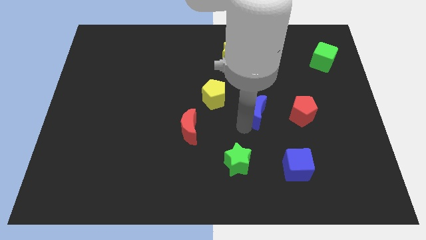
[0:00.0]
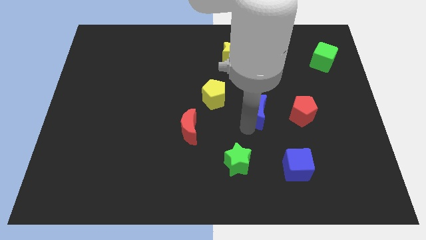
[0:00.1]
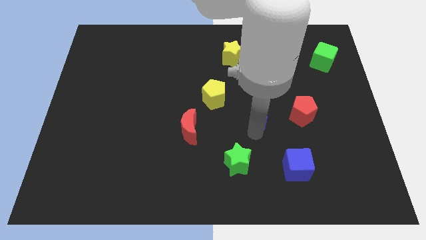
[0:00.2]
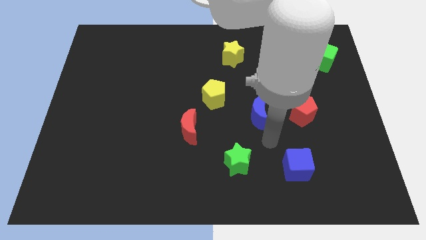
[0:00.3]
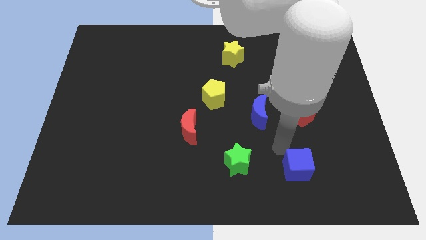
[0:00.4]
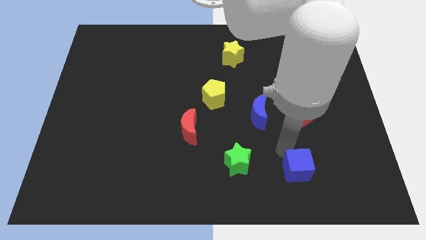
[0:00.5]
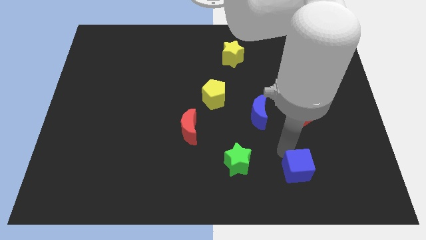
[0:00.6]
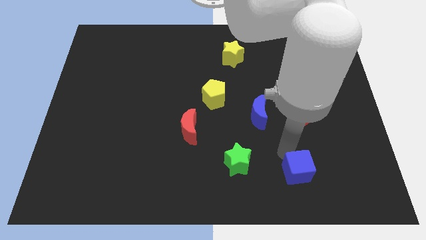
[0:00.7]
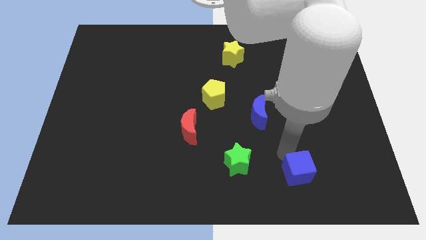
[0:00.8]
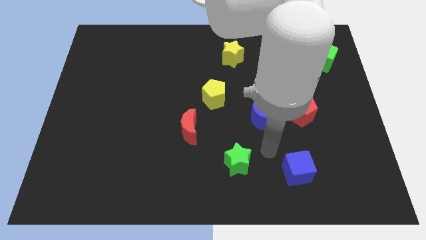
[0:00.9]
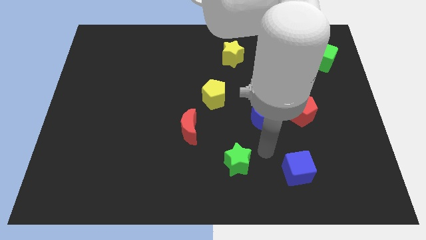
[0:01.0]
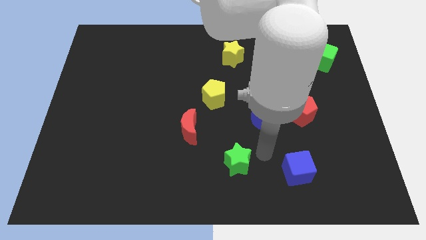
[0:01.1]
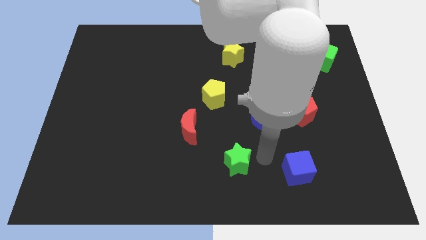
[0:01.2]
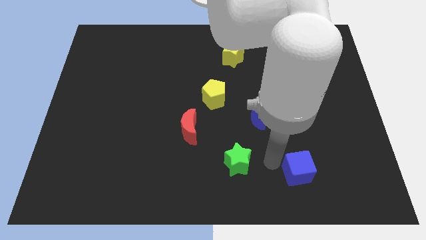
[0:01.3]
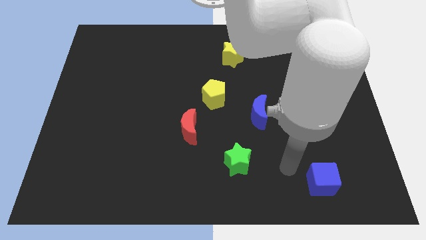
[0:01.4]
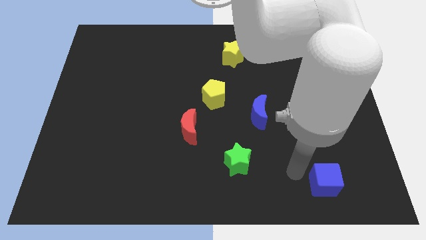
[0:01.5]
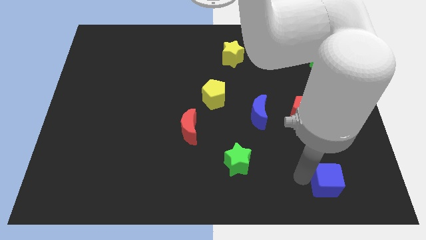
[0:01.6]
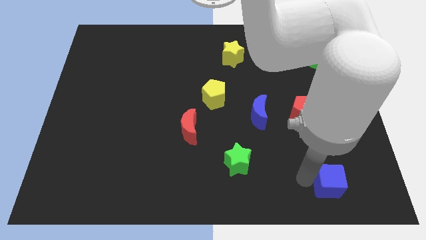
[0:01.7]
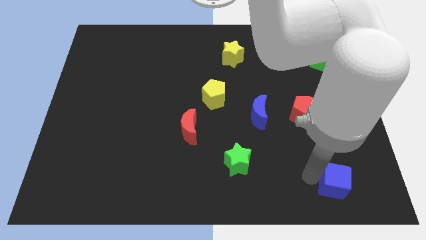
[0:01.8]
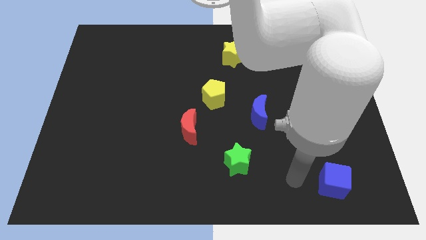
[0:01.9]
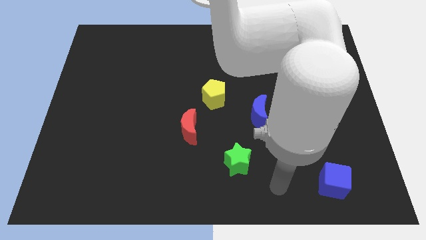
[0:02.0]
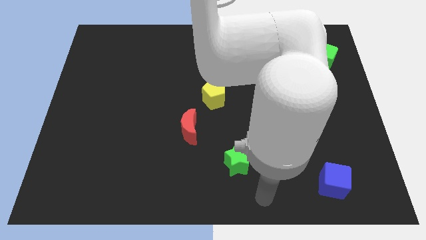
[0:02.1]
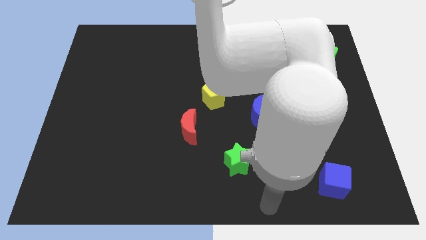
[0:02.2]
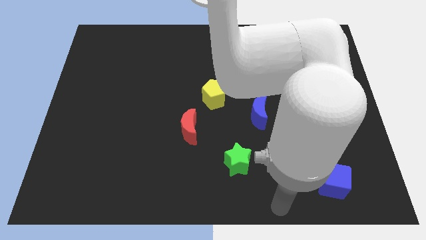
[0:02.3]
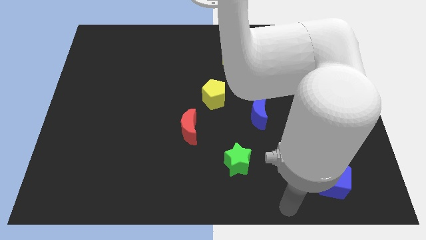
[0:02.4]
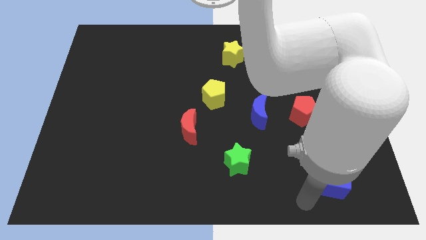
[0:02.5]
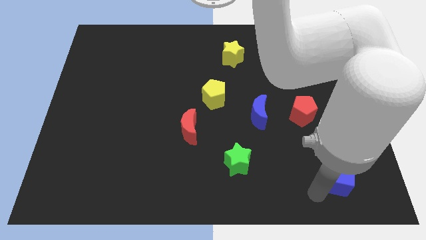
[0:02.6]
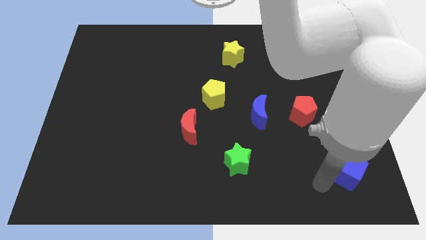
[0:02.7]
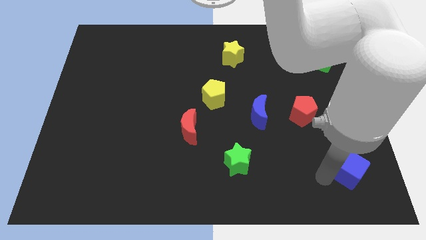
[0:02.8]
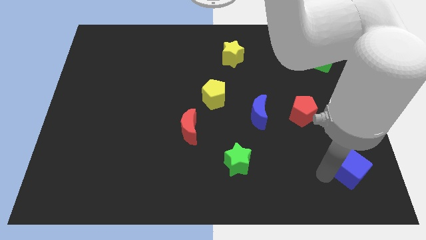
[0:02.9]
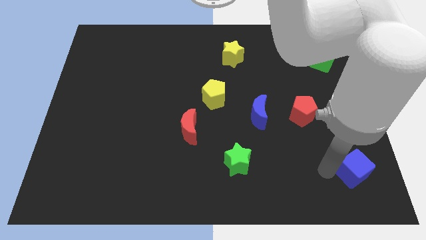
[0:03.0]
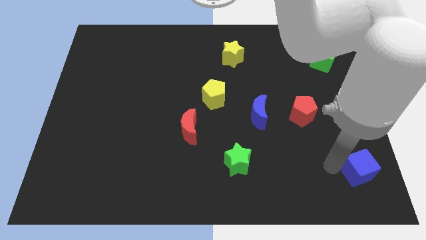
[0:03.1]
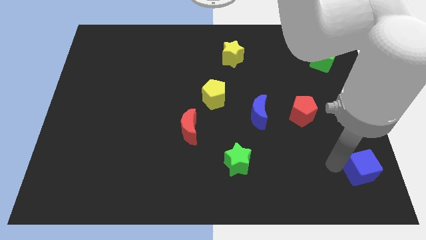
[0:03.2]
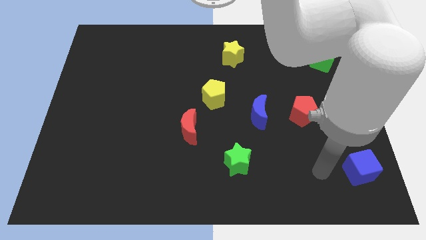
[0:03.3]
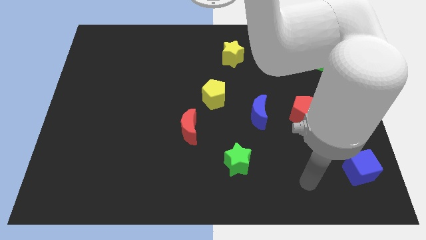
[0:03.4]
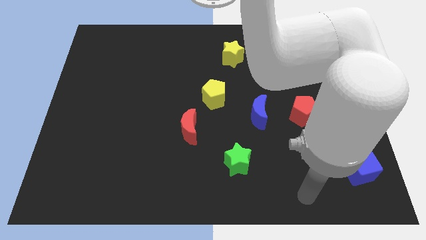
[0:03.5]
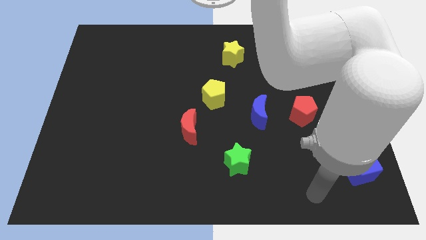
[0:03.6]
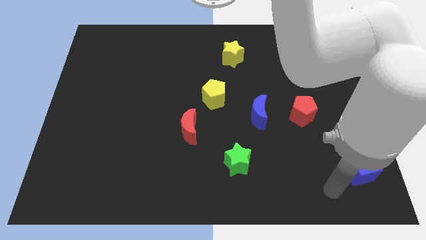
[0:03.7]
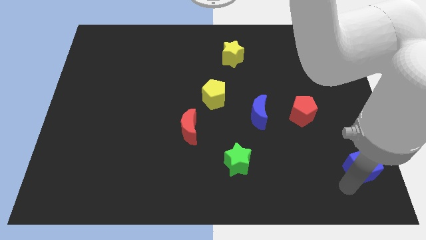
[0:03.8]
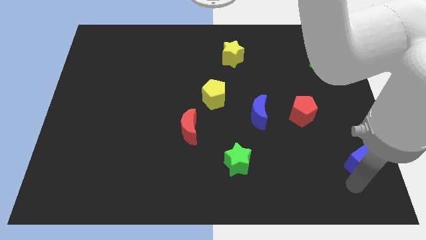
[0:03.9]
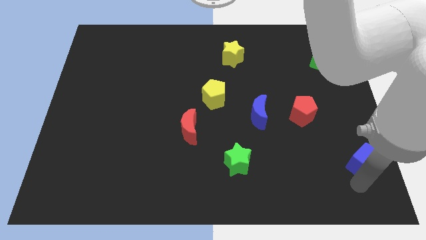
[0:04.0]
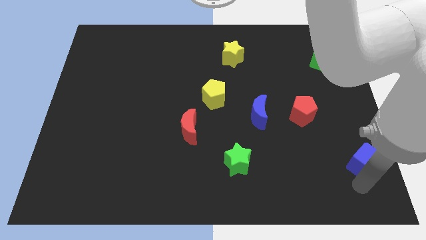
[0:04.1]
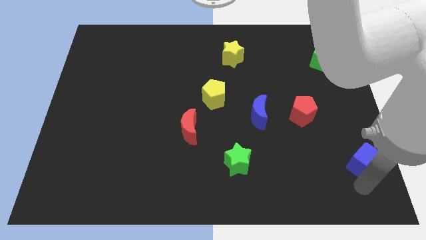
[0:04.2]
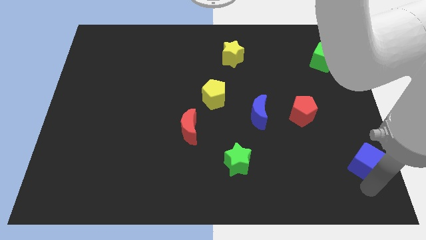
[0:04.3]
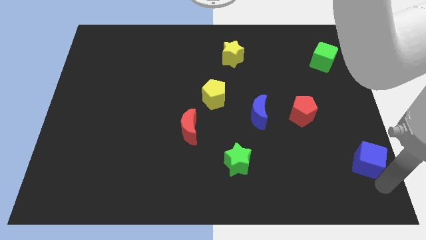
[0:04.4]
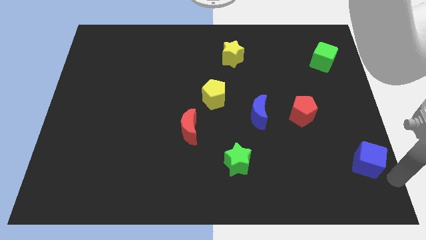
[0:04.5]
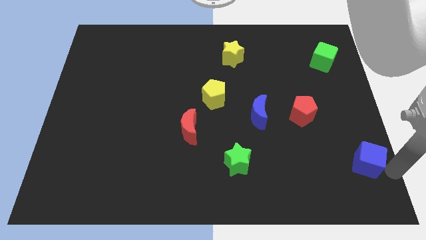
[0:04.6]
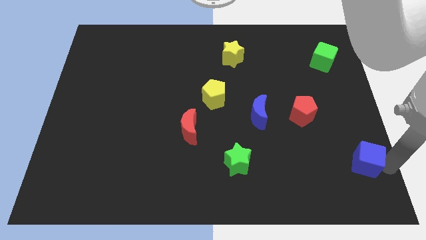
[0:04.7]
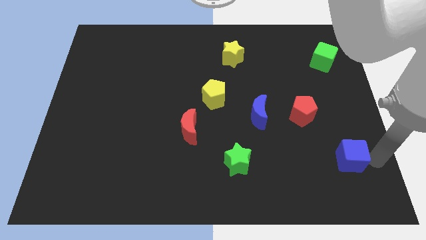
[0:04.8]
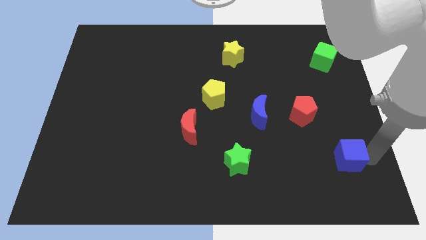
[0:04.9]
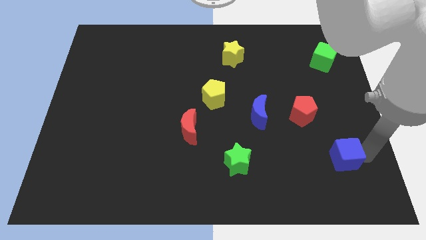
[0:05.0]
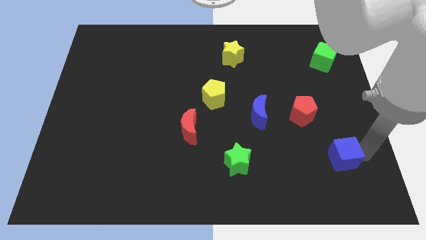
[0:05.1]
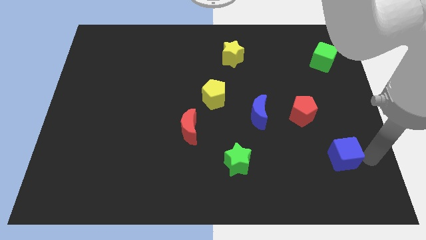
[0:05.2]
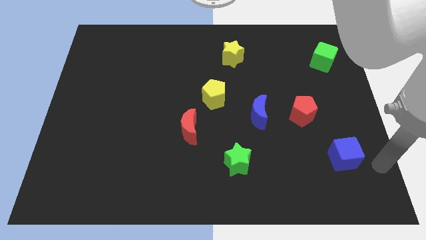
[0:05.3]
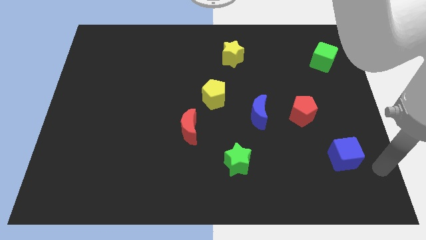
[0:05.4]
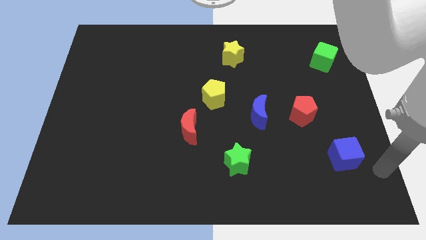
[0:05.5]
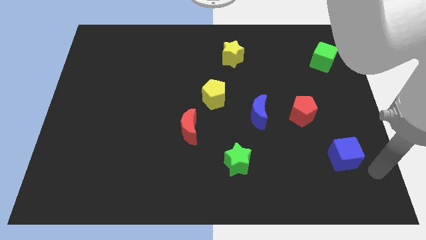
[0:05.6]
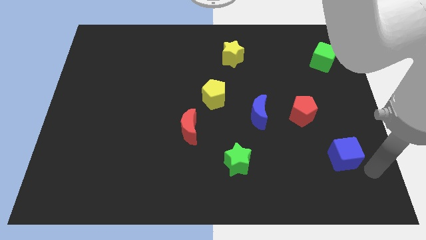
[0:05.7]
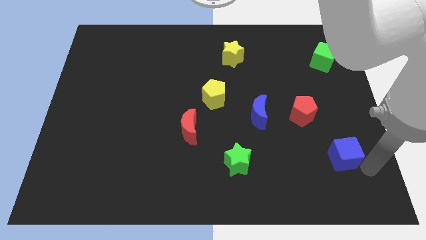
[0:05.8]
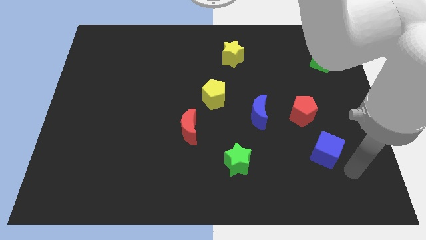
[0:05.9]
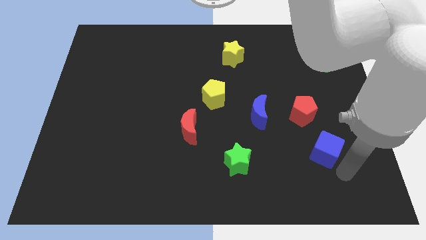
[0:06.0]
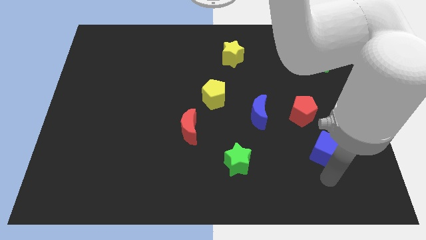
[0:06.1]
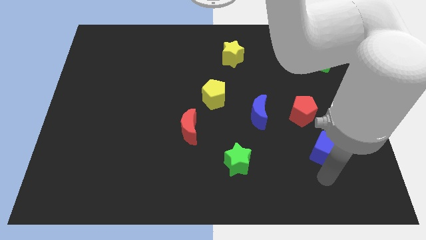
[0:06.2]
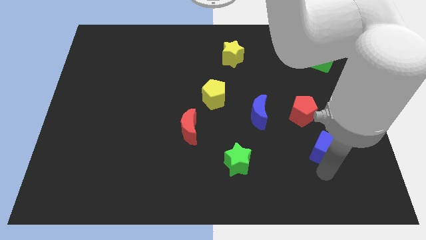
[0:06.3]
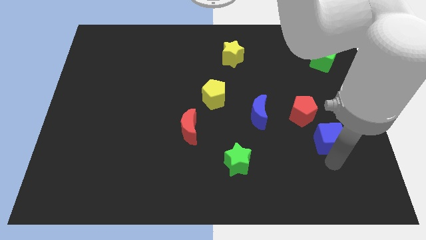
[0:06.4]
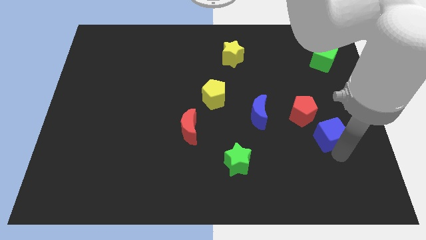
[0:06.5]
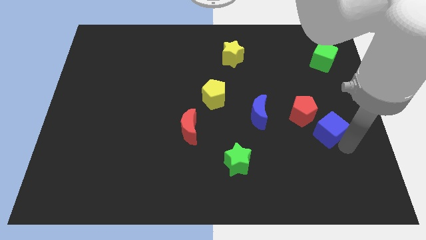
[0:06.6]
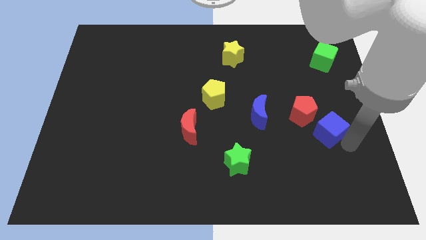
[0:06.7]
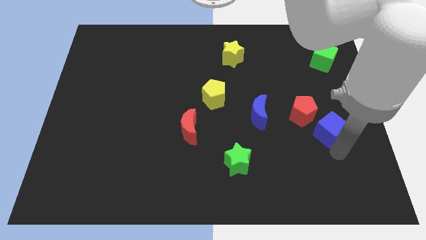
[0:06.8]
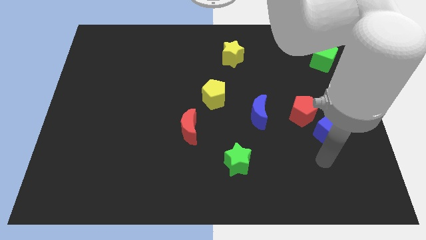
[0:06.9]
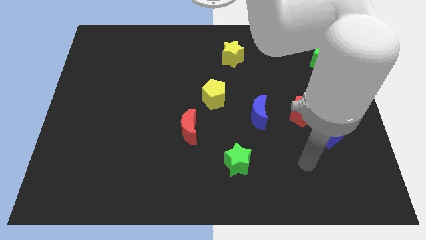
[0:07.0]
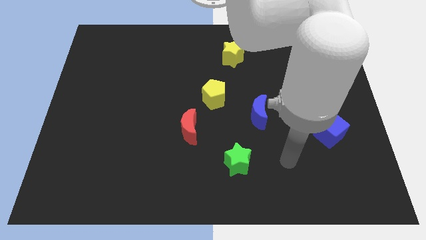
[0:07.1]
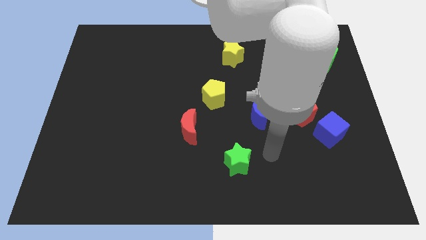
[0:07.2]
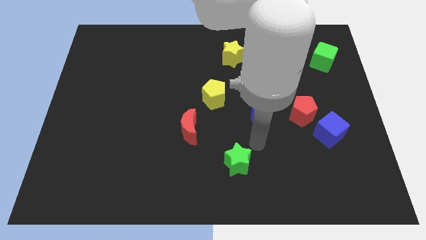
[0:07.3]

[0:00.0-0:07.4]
move the blue cube near to the bottom right to the red pentagon

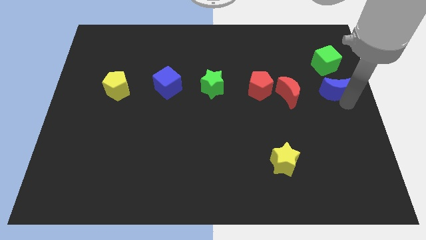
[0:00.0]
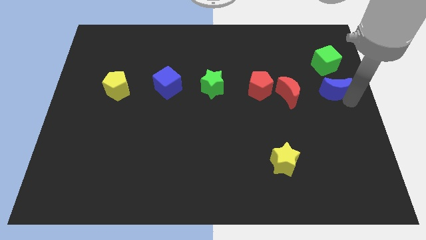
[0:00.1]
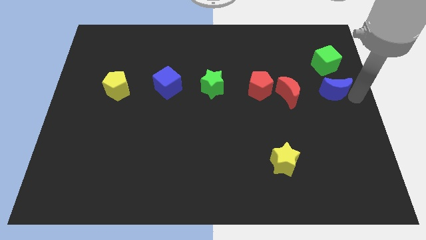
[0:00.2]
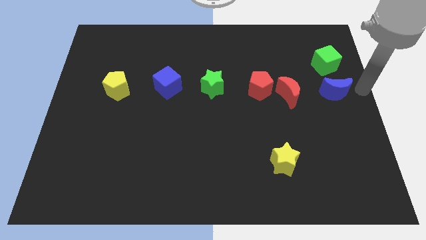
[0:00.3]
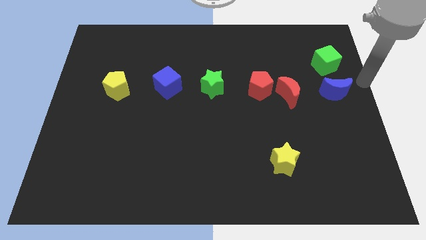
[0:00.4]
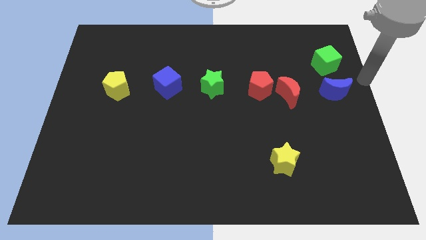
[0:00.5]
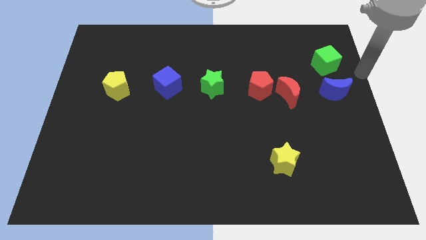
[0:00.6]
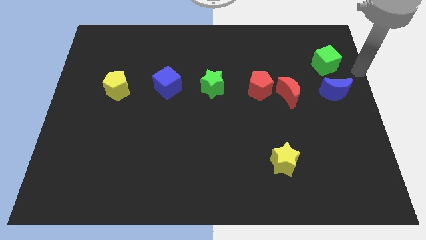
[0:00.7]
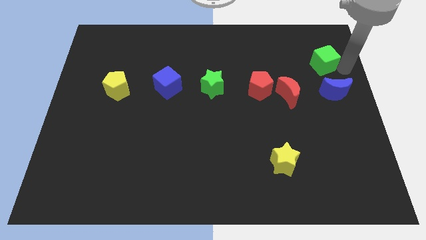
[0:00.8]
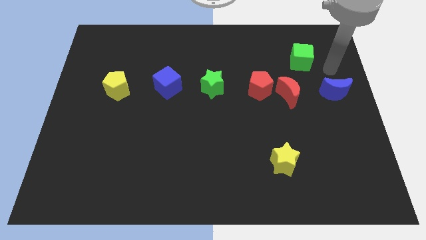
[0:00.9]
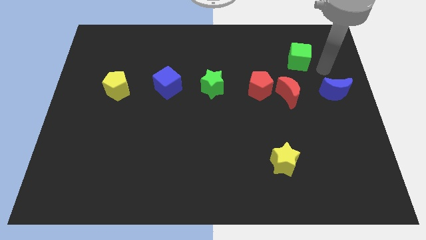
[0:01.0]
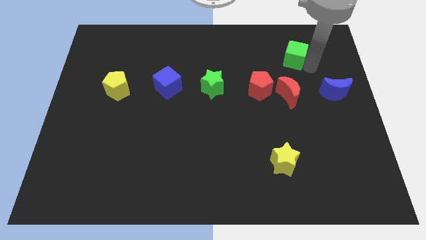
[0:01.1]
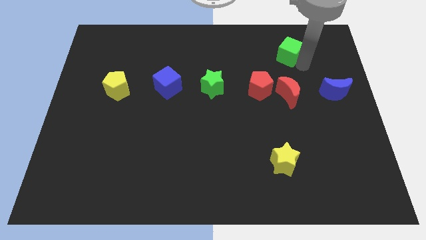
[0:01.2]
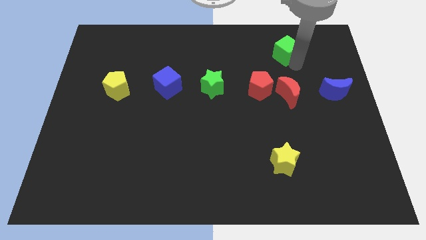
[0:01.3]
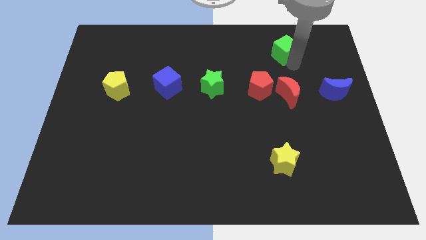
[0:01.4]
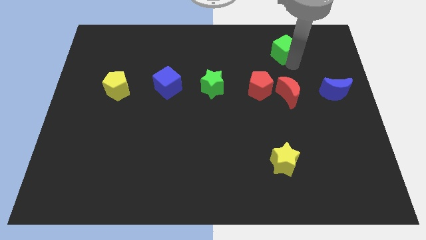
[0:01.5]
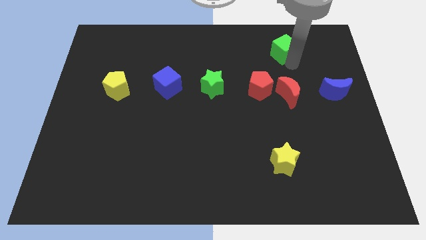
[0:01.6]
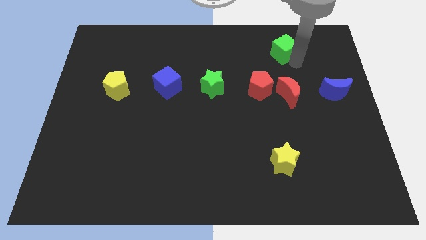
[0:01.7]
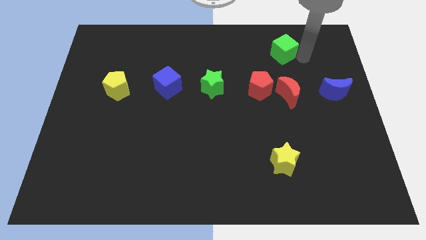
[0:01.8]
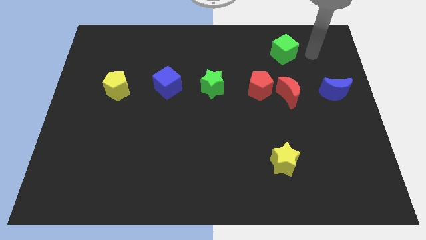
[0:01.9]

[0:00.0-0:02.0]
push the green cube above the red moon
